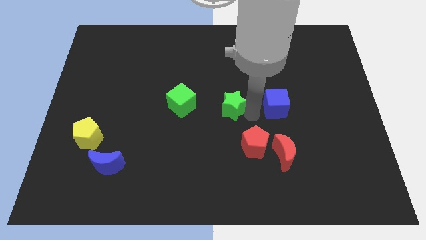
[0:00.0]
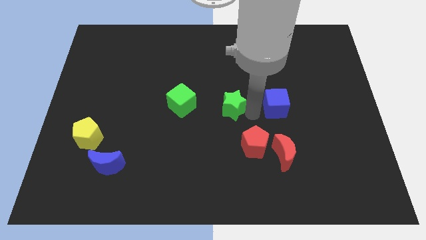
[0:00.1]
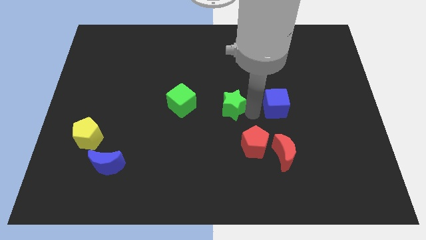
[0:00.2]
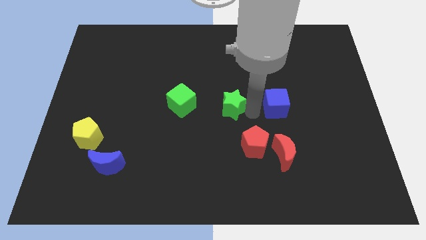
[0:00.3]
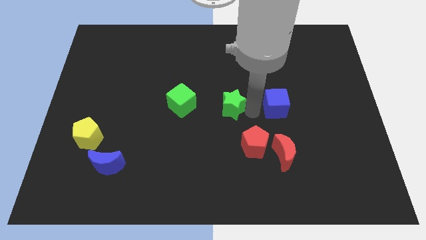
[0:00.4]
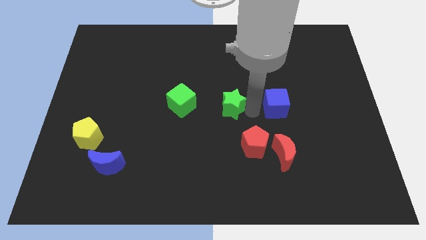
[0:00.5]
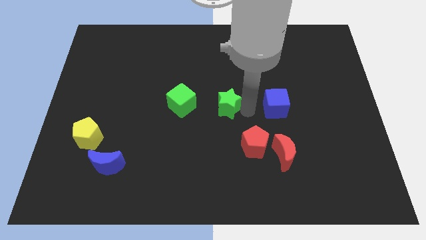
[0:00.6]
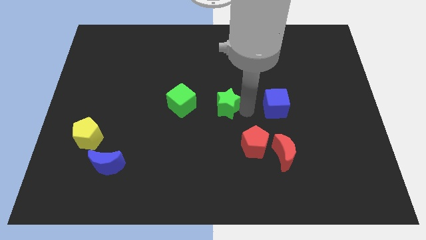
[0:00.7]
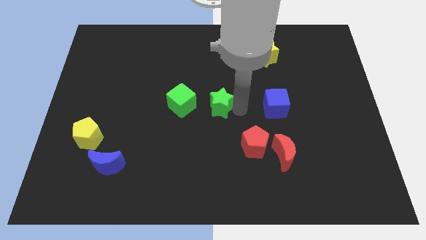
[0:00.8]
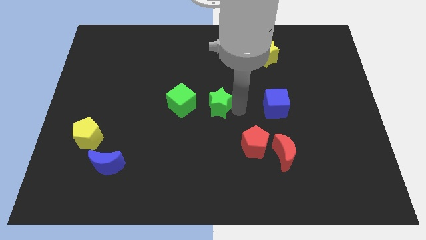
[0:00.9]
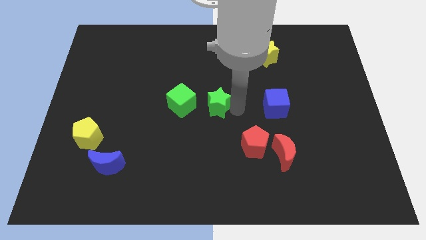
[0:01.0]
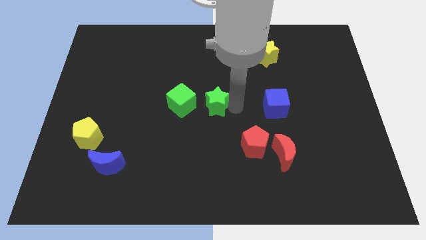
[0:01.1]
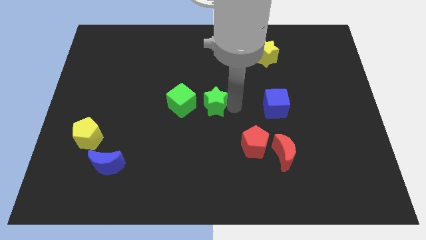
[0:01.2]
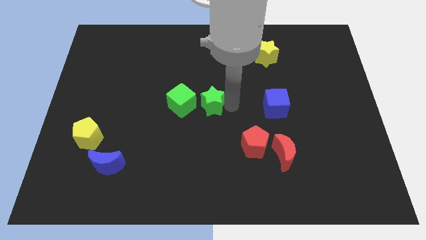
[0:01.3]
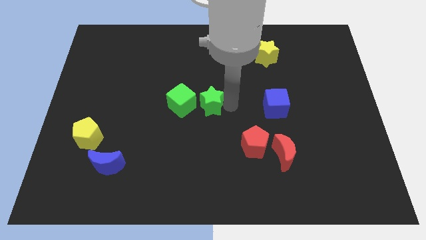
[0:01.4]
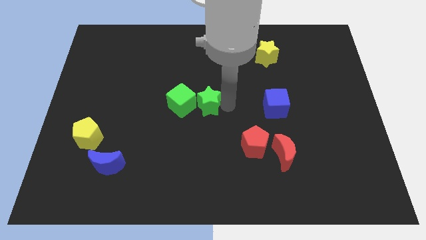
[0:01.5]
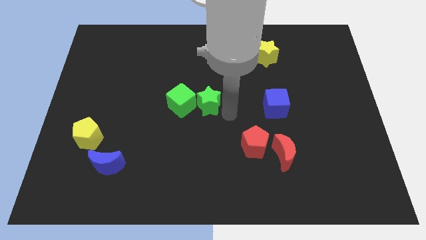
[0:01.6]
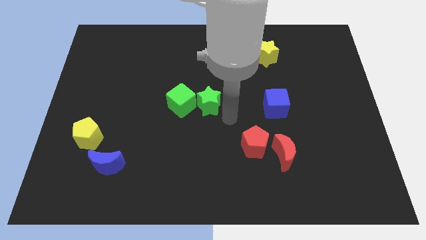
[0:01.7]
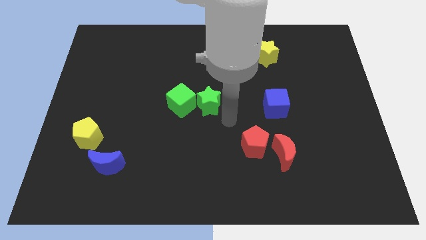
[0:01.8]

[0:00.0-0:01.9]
place the green star close to the green cube

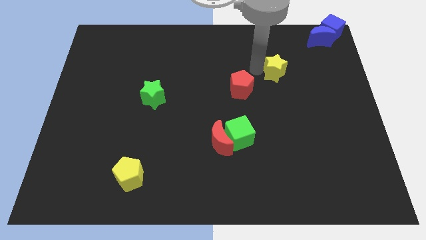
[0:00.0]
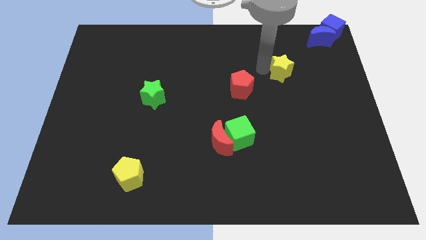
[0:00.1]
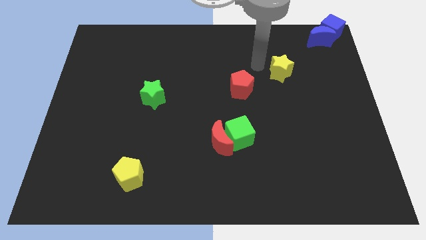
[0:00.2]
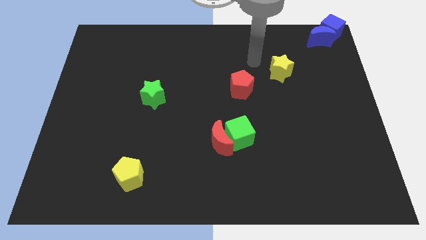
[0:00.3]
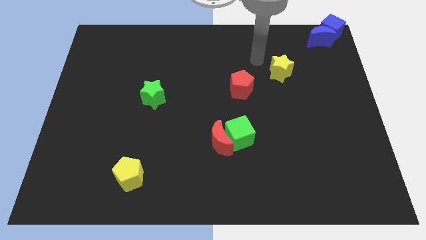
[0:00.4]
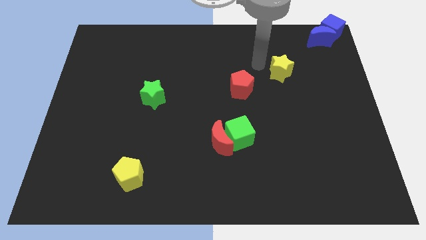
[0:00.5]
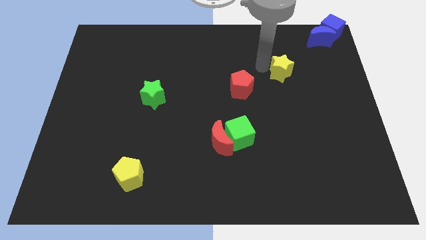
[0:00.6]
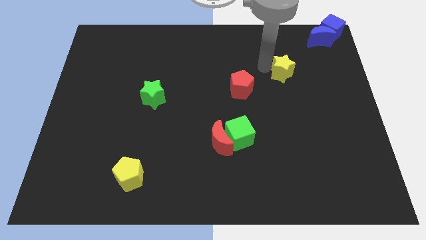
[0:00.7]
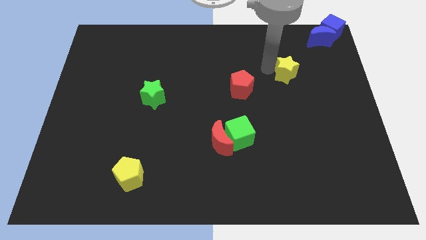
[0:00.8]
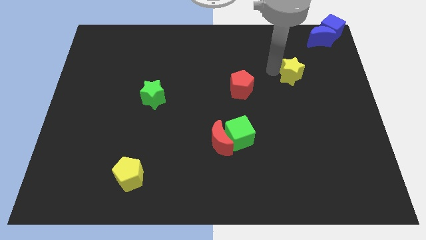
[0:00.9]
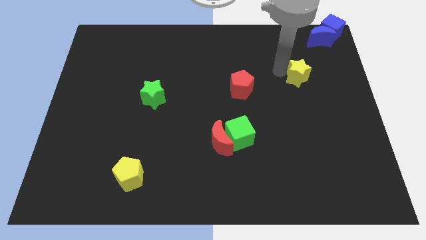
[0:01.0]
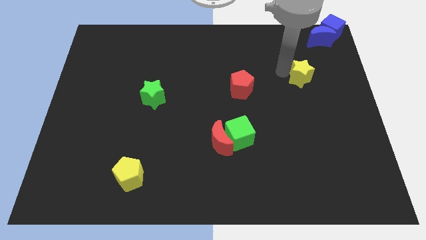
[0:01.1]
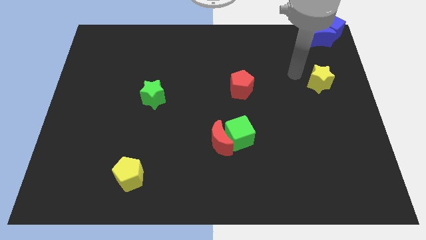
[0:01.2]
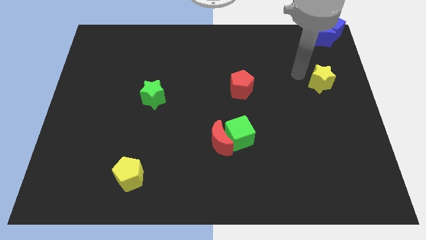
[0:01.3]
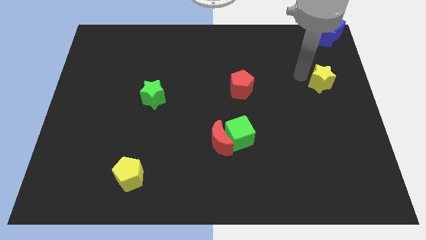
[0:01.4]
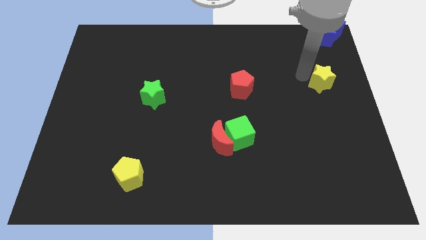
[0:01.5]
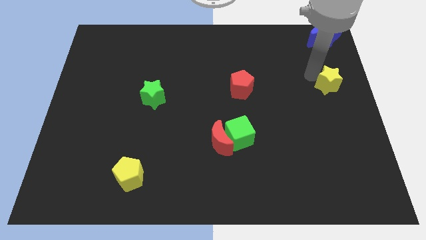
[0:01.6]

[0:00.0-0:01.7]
put the yellow star vertically below the blue moon

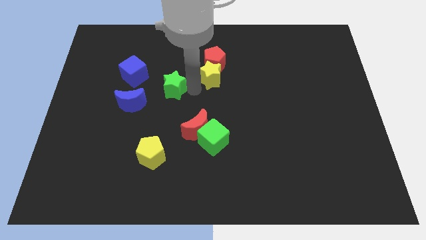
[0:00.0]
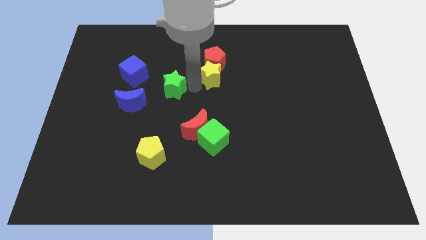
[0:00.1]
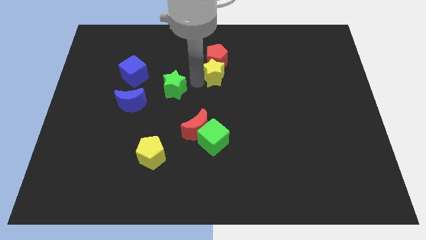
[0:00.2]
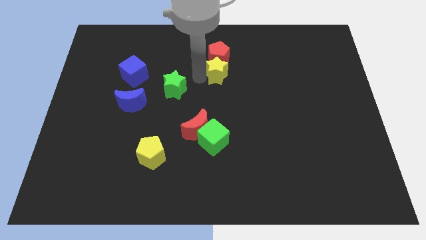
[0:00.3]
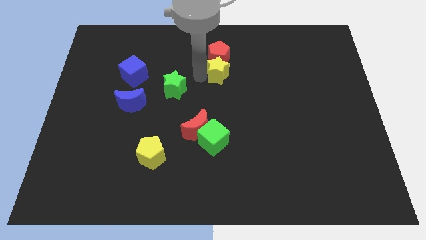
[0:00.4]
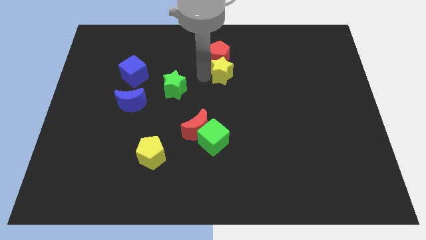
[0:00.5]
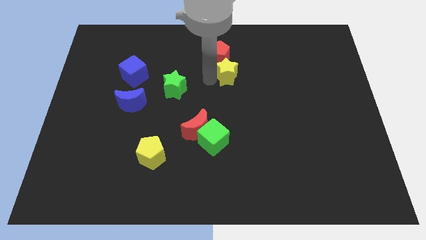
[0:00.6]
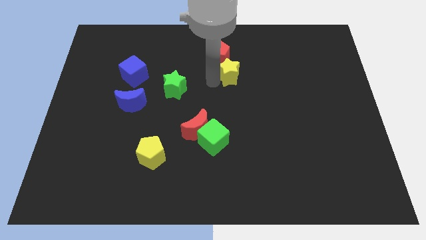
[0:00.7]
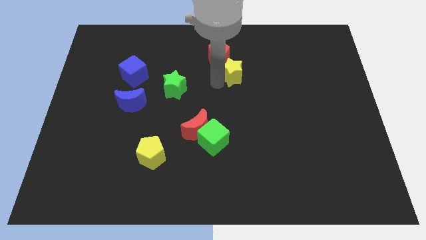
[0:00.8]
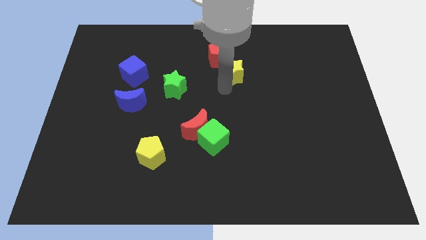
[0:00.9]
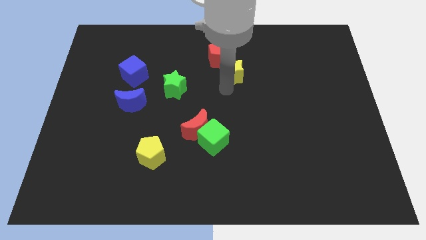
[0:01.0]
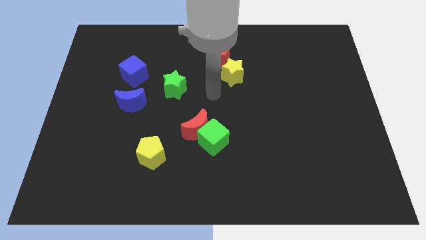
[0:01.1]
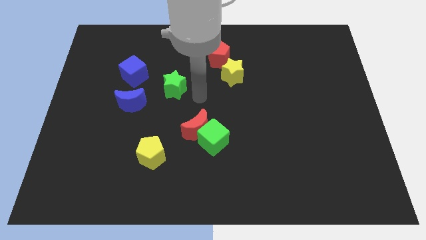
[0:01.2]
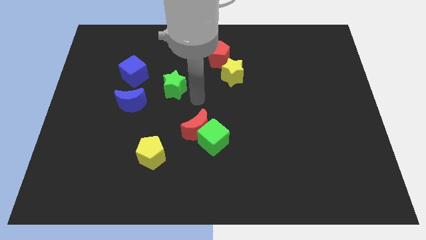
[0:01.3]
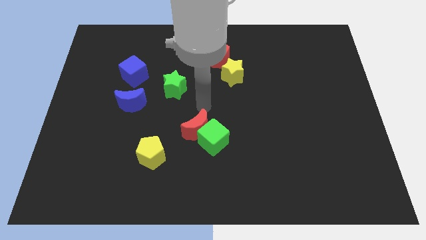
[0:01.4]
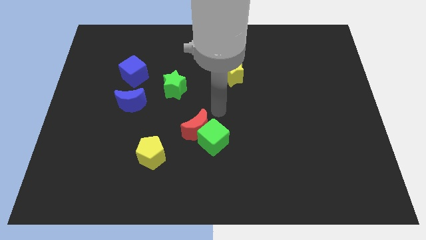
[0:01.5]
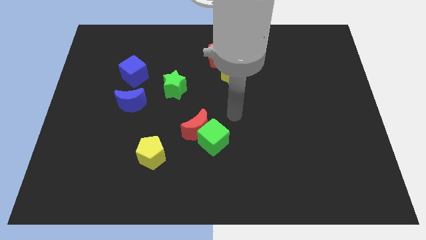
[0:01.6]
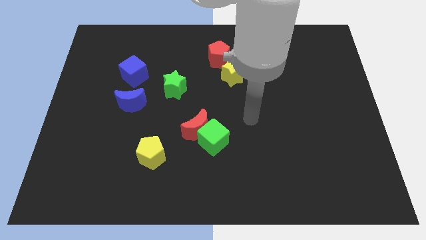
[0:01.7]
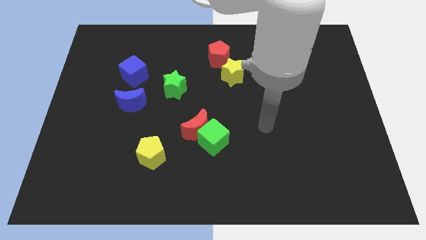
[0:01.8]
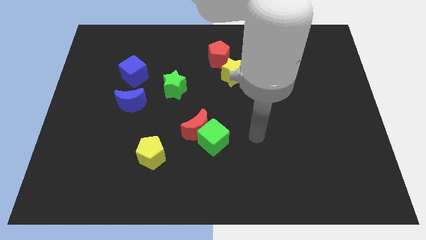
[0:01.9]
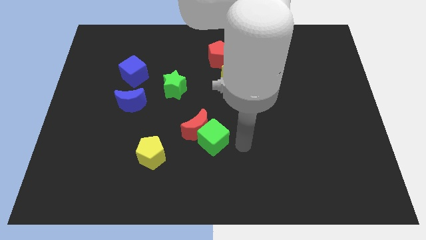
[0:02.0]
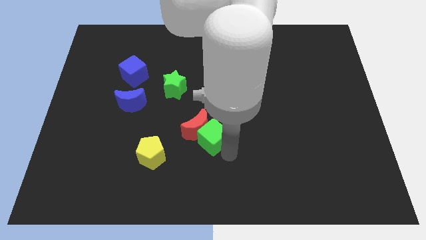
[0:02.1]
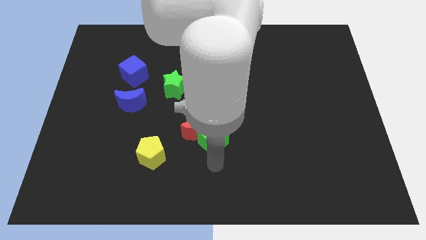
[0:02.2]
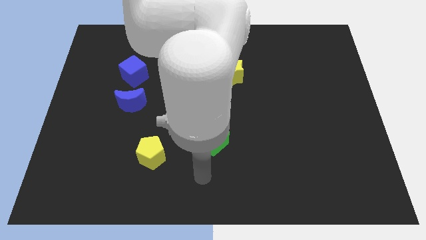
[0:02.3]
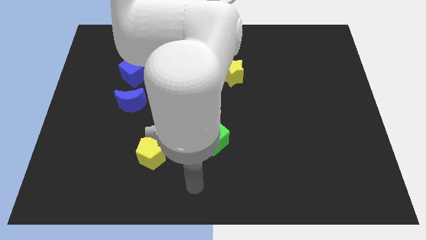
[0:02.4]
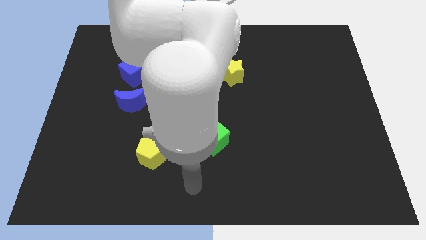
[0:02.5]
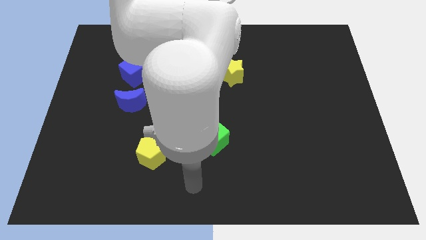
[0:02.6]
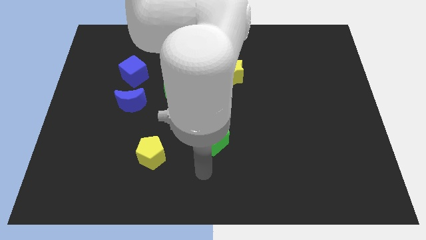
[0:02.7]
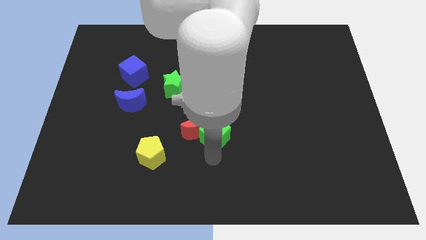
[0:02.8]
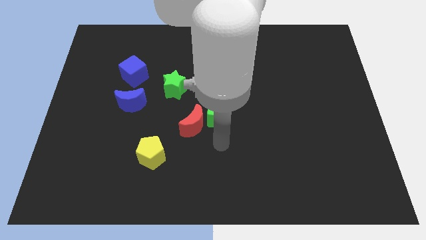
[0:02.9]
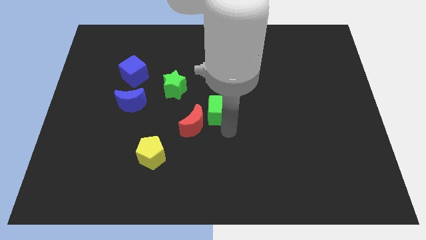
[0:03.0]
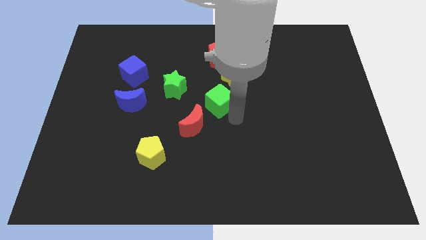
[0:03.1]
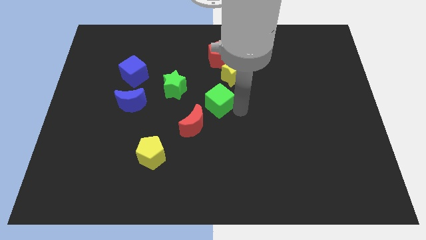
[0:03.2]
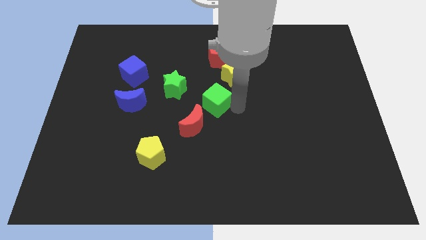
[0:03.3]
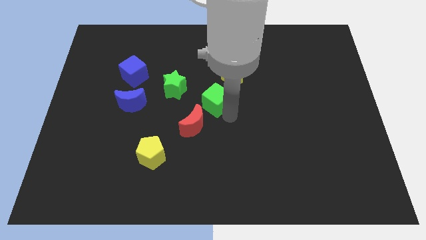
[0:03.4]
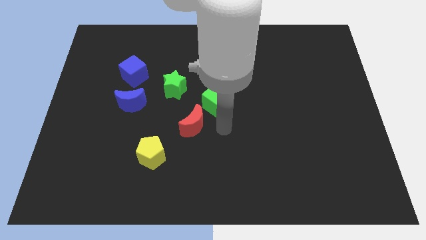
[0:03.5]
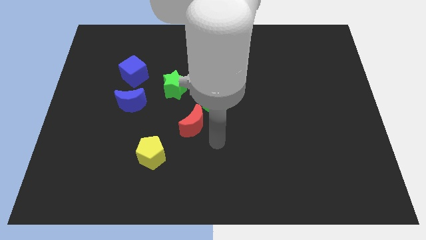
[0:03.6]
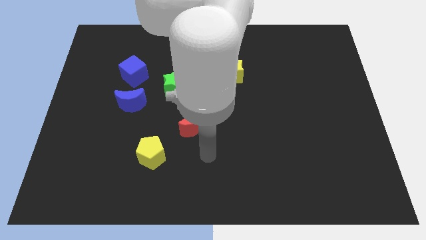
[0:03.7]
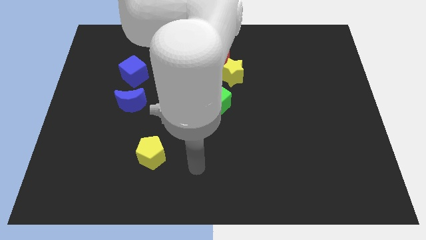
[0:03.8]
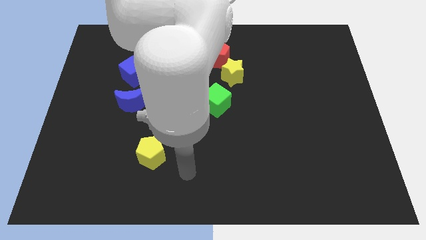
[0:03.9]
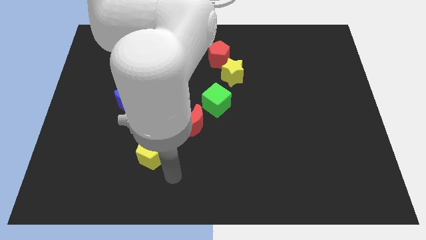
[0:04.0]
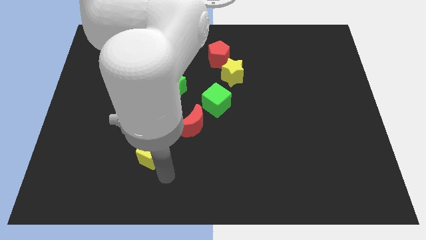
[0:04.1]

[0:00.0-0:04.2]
arrange the group of blocks properly to form a line

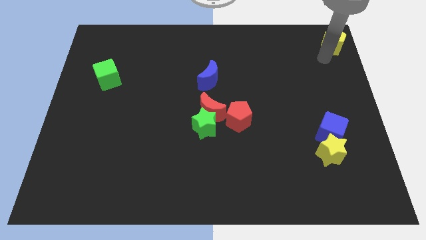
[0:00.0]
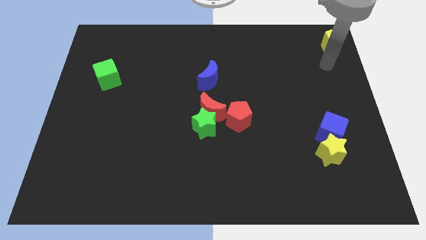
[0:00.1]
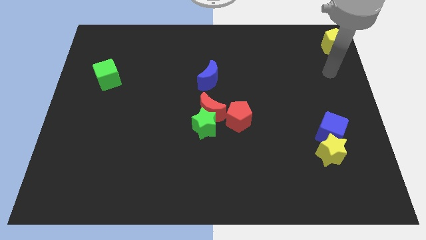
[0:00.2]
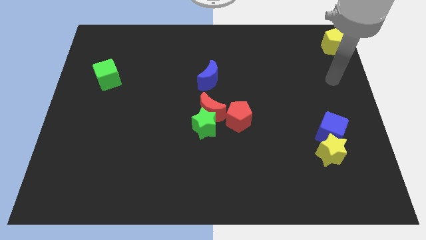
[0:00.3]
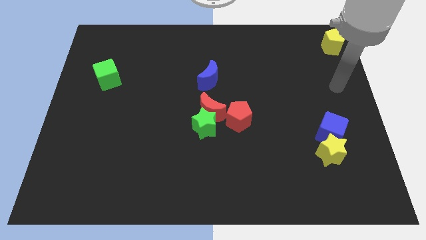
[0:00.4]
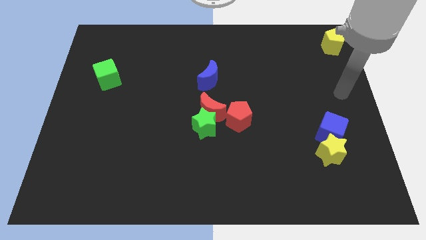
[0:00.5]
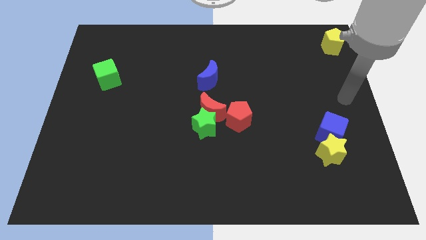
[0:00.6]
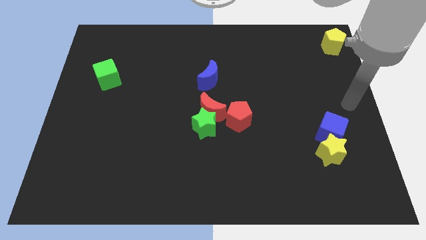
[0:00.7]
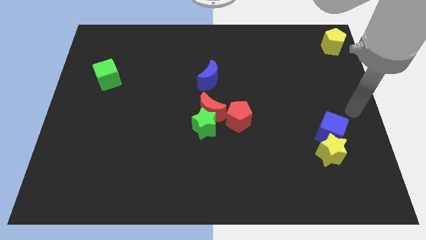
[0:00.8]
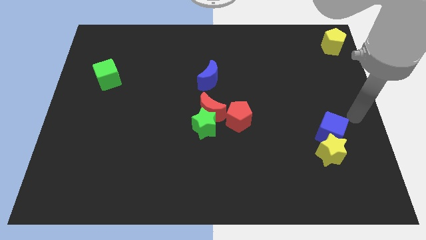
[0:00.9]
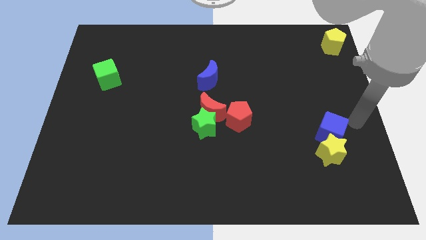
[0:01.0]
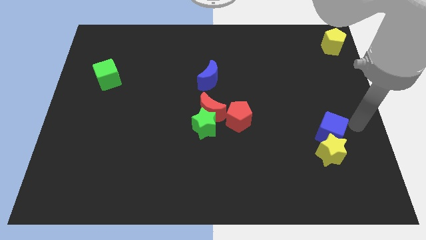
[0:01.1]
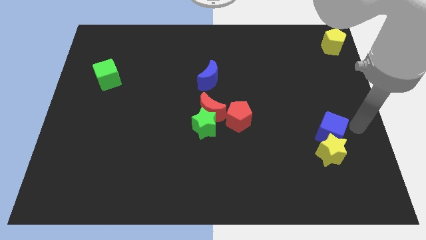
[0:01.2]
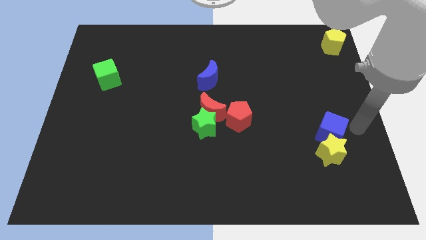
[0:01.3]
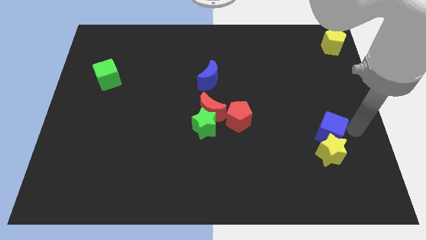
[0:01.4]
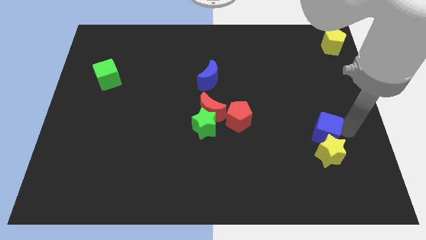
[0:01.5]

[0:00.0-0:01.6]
move the arm to the right side of the blue cube
